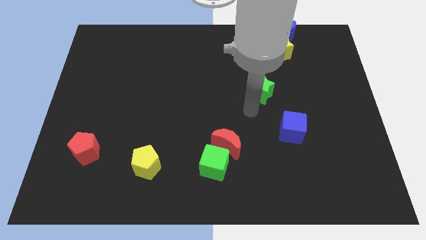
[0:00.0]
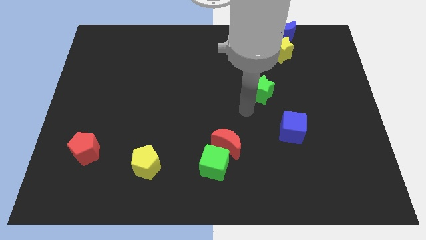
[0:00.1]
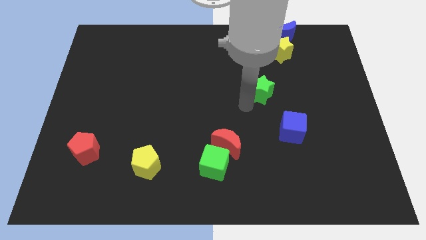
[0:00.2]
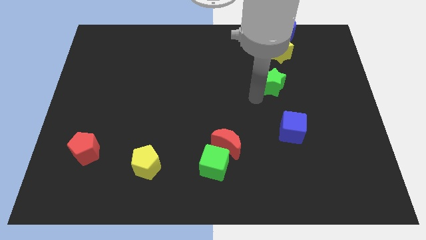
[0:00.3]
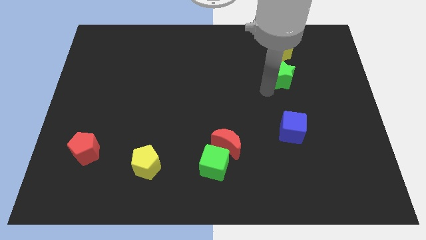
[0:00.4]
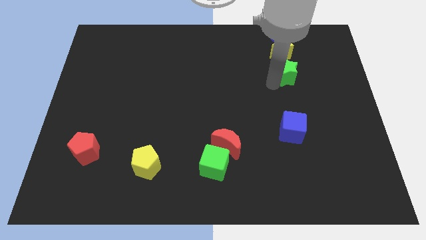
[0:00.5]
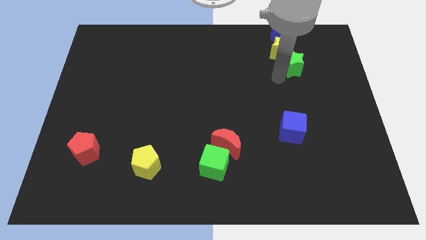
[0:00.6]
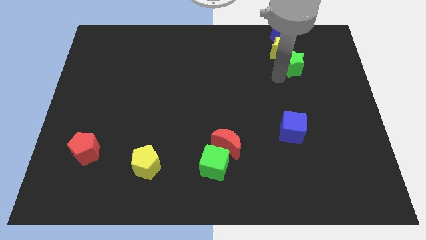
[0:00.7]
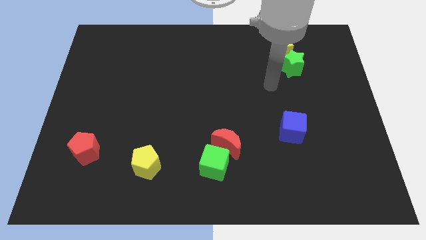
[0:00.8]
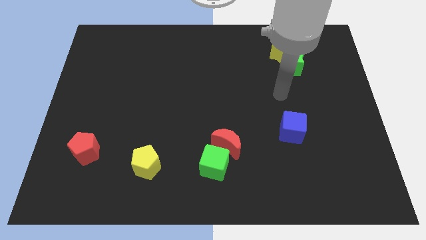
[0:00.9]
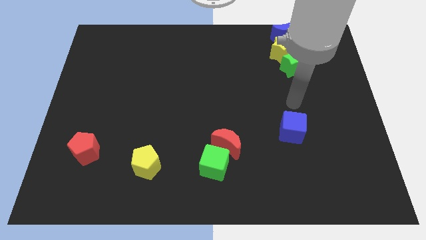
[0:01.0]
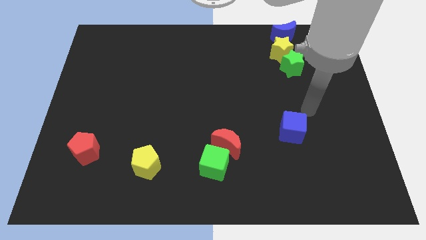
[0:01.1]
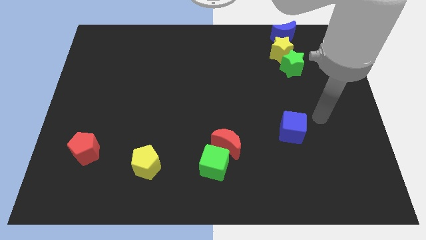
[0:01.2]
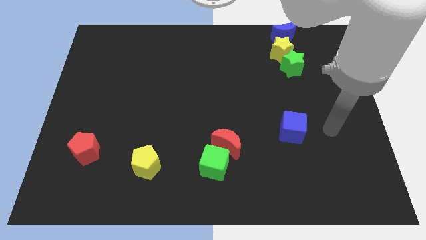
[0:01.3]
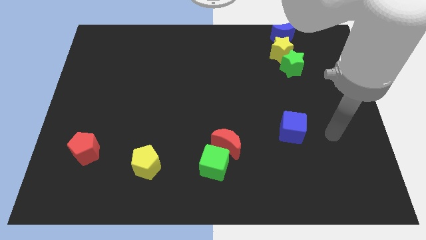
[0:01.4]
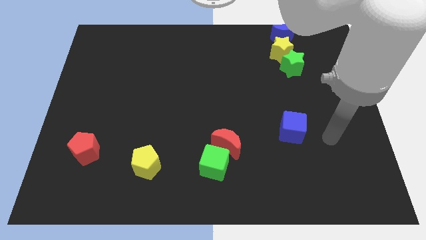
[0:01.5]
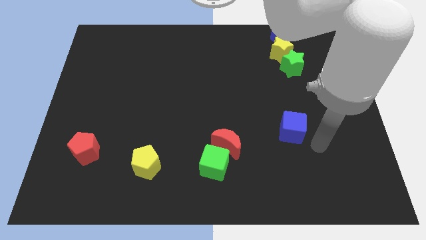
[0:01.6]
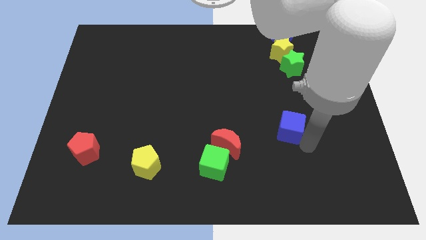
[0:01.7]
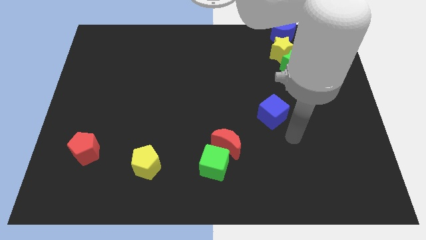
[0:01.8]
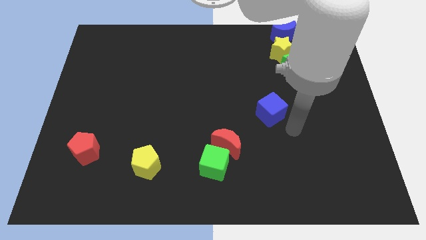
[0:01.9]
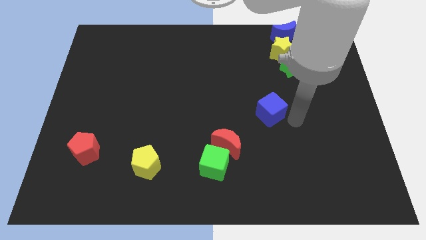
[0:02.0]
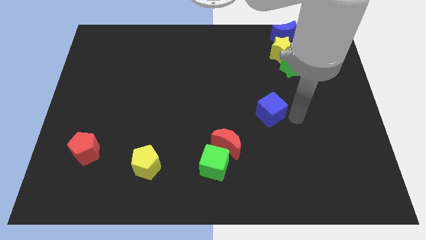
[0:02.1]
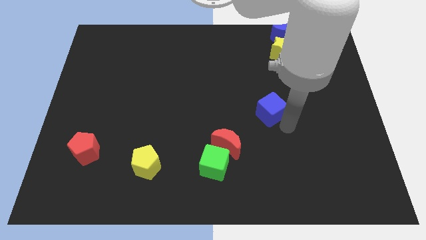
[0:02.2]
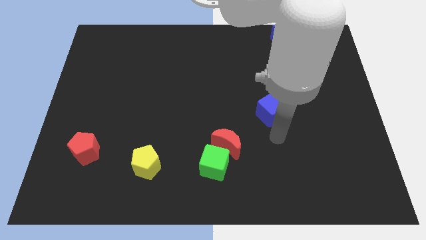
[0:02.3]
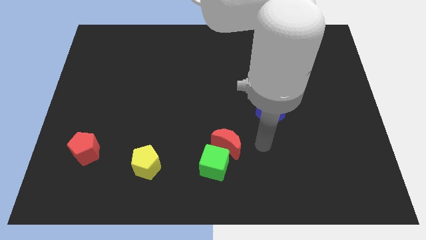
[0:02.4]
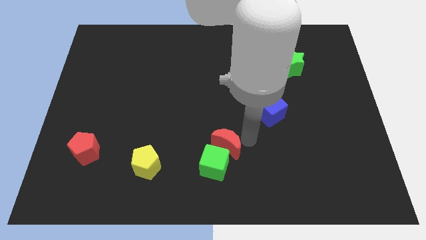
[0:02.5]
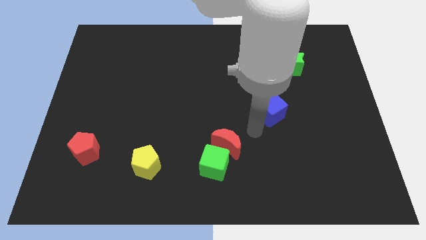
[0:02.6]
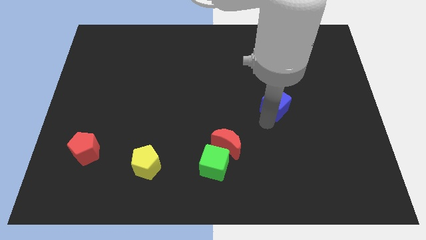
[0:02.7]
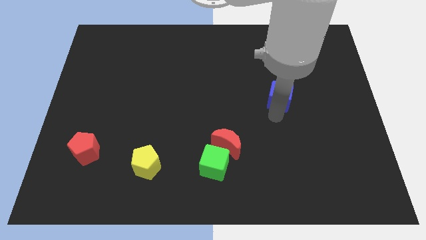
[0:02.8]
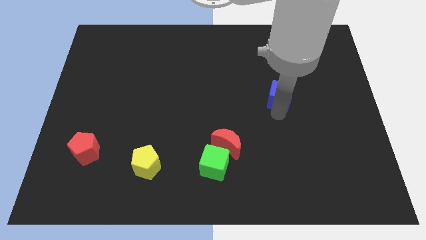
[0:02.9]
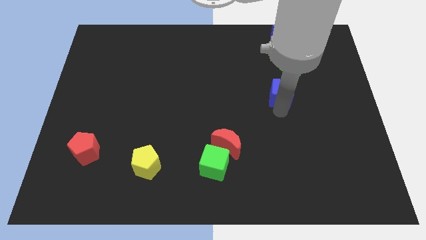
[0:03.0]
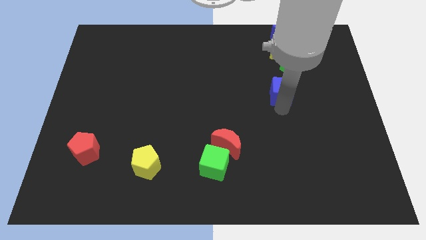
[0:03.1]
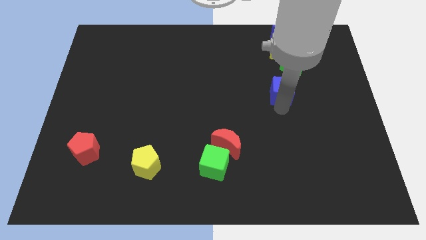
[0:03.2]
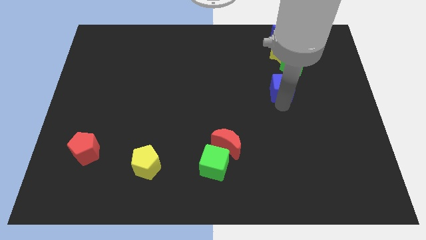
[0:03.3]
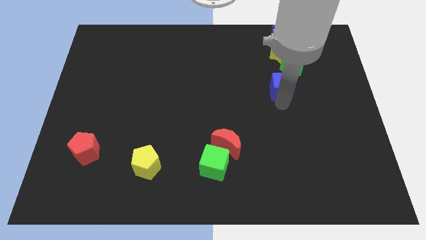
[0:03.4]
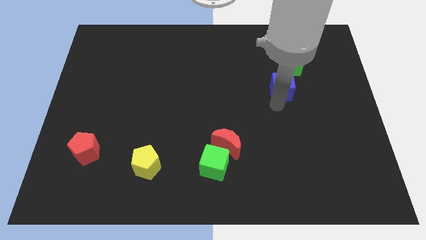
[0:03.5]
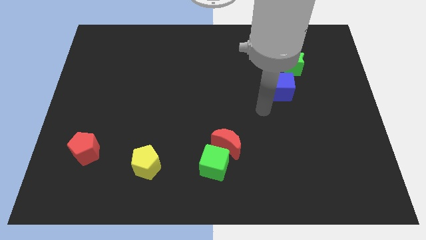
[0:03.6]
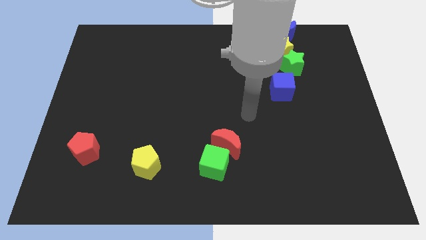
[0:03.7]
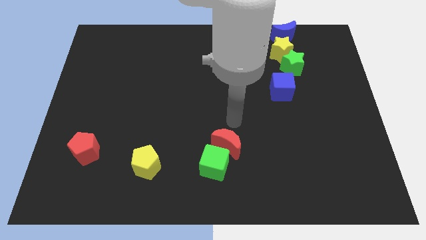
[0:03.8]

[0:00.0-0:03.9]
move blue cube left below the green star

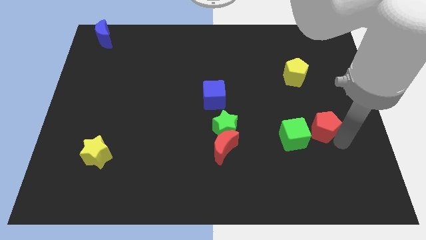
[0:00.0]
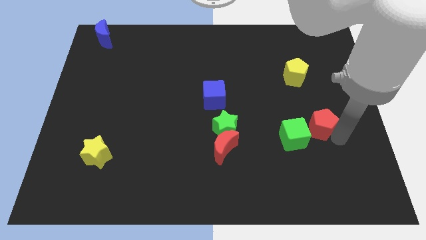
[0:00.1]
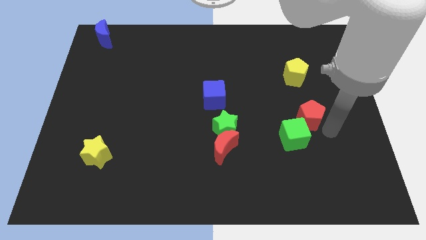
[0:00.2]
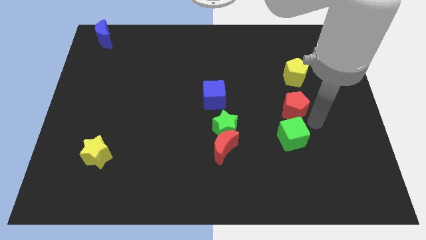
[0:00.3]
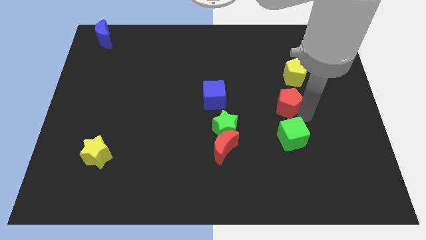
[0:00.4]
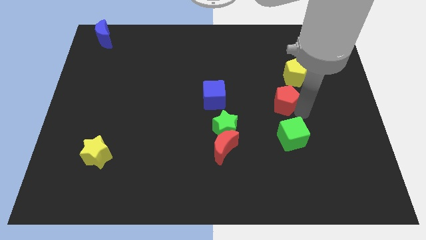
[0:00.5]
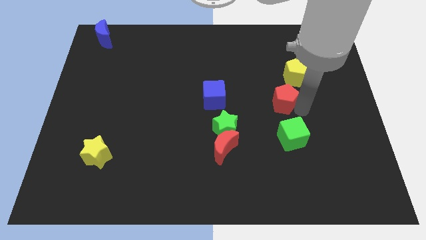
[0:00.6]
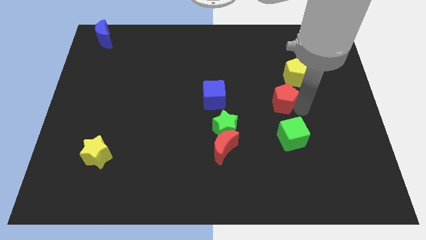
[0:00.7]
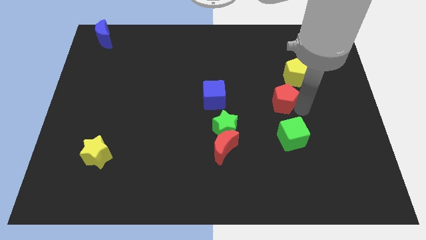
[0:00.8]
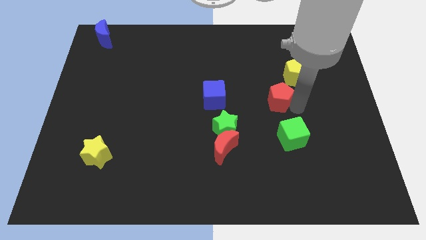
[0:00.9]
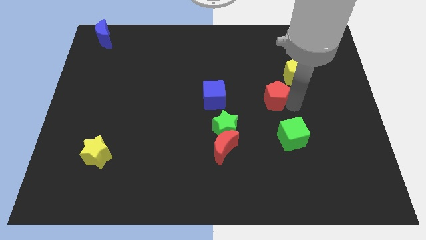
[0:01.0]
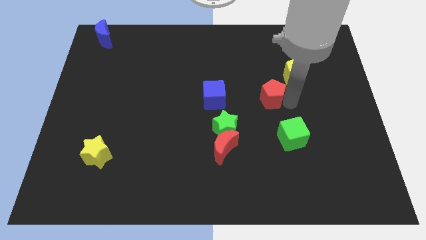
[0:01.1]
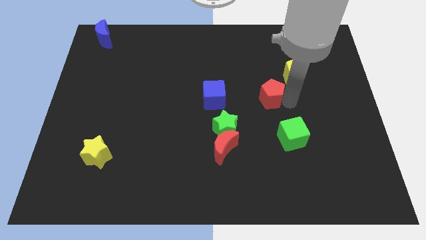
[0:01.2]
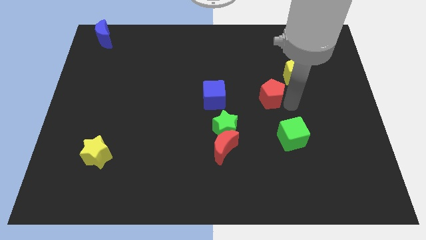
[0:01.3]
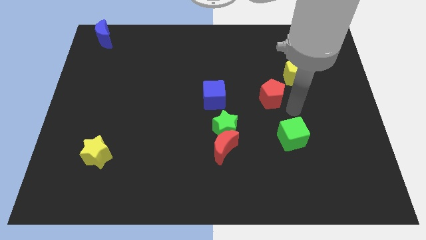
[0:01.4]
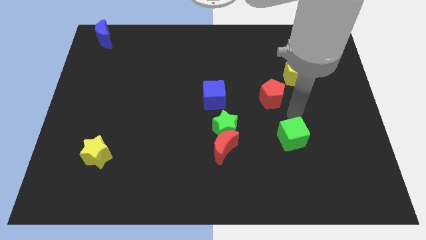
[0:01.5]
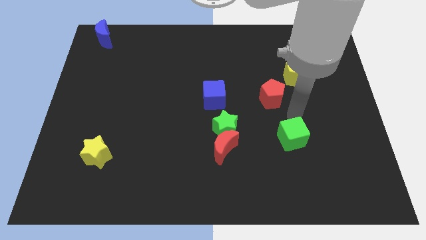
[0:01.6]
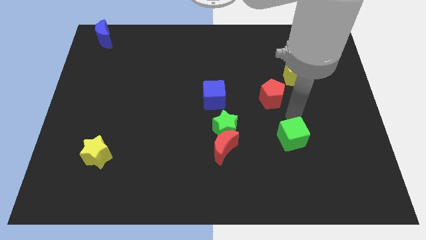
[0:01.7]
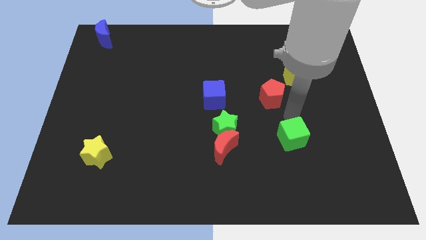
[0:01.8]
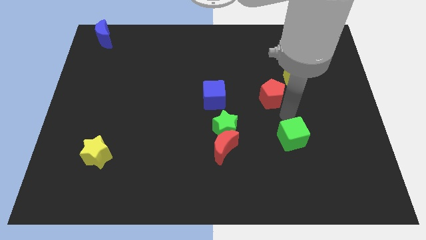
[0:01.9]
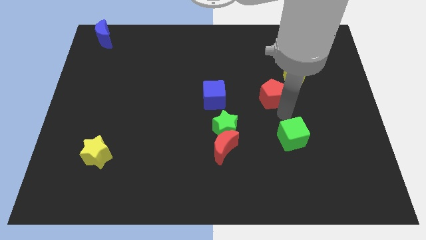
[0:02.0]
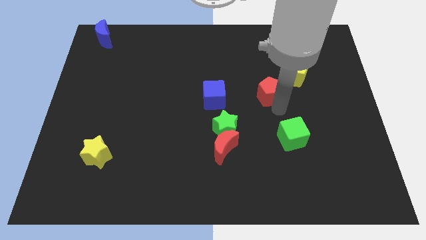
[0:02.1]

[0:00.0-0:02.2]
push the red pentagon to the right of the blue cube

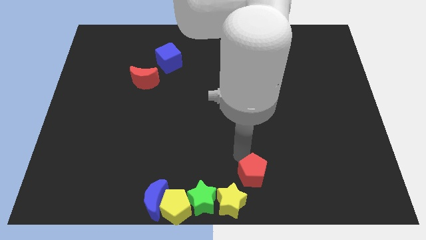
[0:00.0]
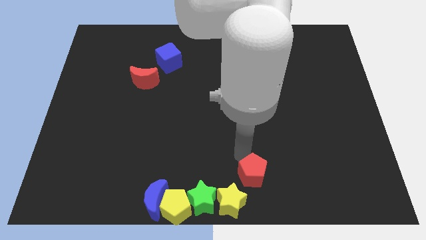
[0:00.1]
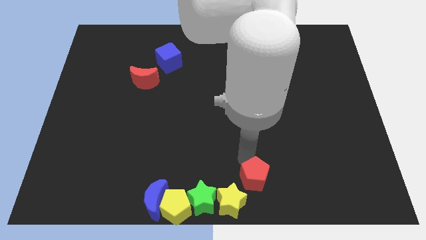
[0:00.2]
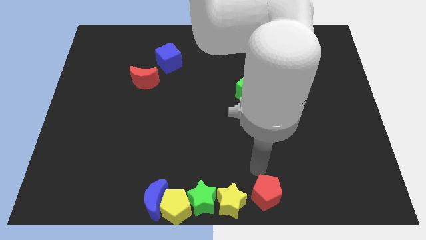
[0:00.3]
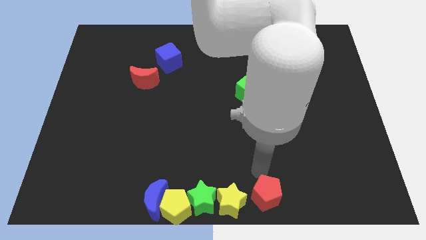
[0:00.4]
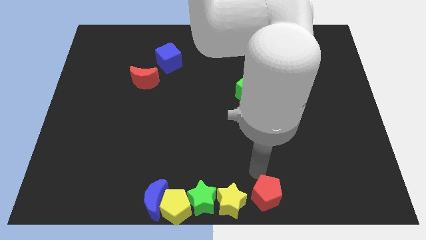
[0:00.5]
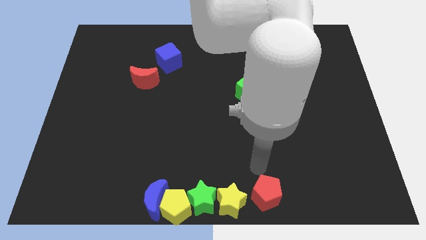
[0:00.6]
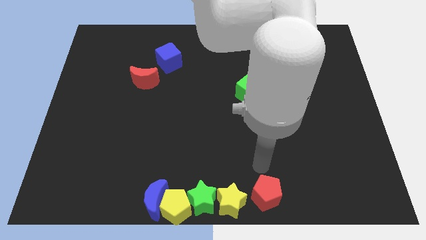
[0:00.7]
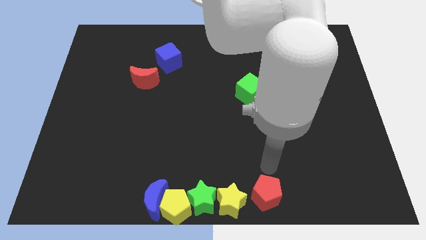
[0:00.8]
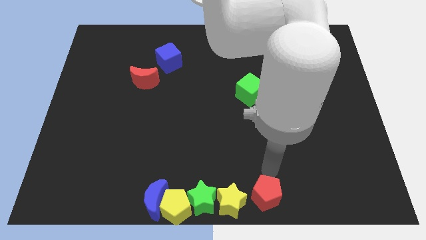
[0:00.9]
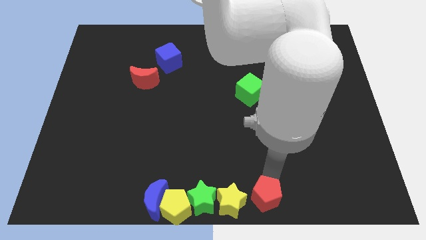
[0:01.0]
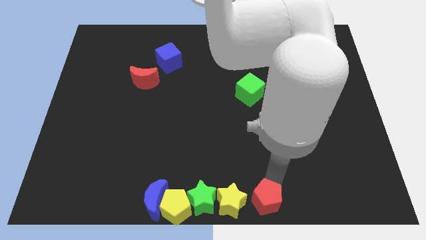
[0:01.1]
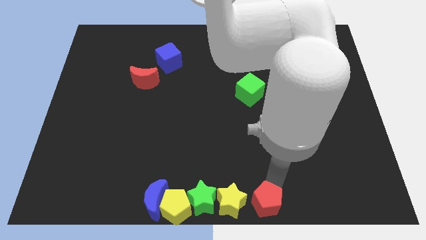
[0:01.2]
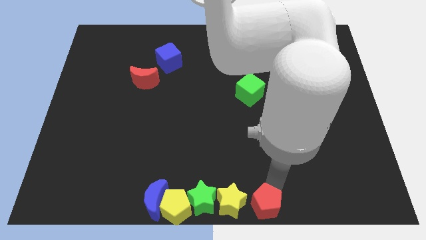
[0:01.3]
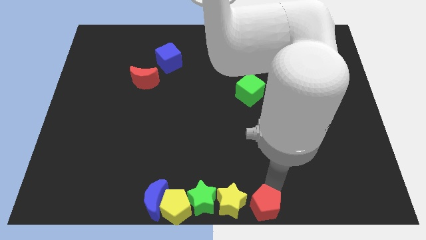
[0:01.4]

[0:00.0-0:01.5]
place the red pentagon to the right of the yellow star

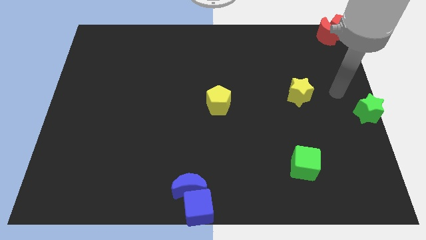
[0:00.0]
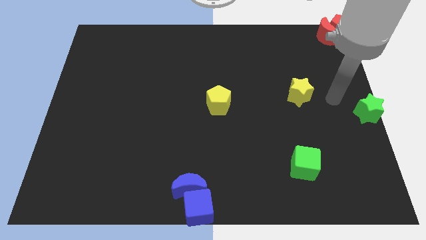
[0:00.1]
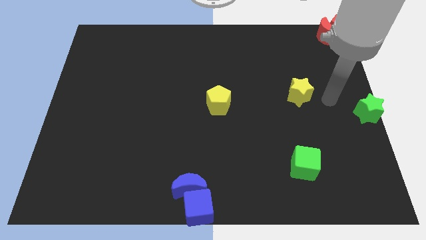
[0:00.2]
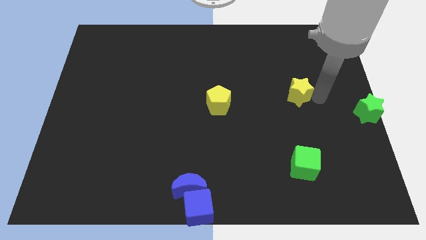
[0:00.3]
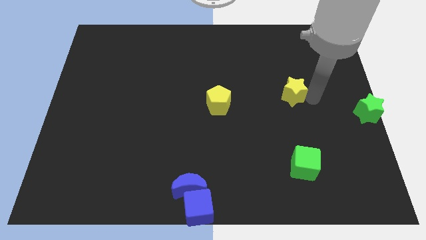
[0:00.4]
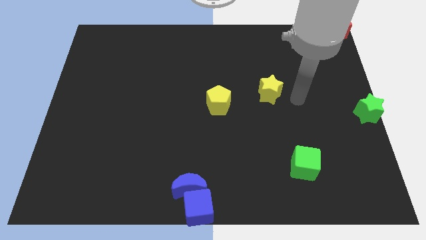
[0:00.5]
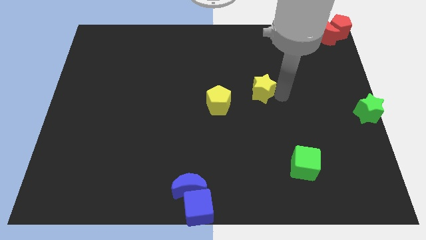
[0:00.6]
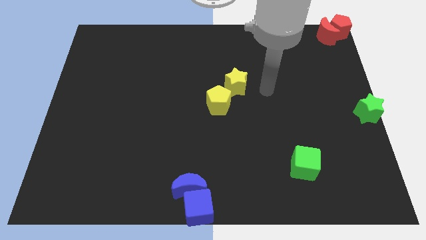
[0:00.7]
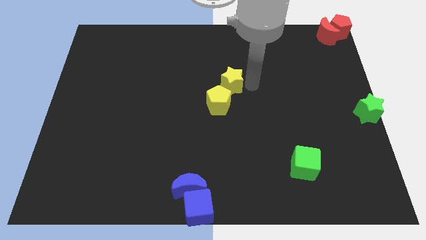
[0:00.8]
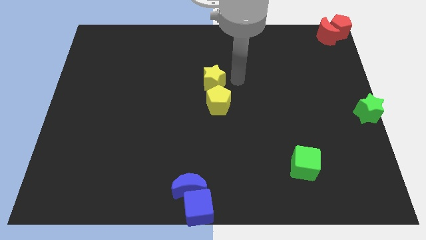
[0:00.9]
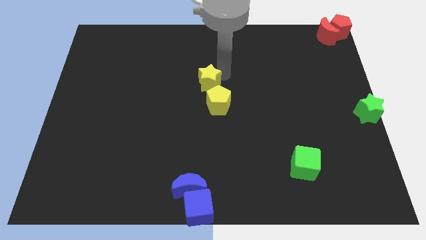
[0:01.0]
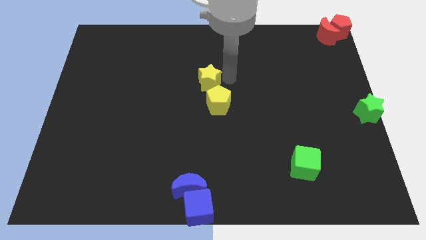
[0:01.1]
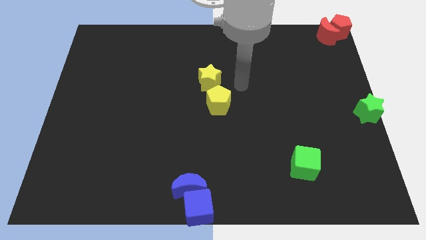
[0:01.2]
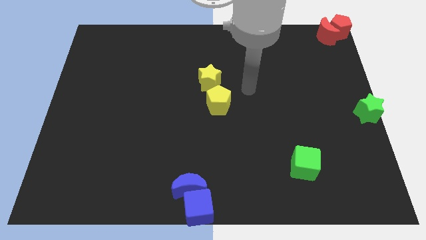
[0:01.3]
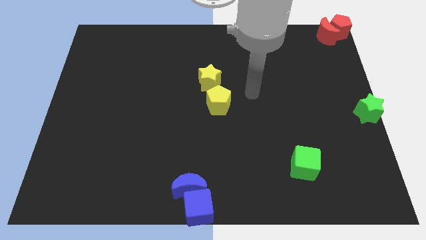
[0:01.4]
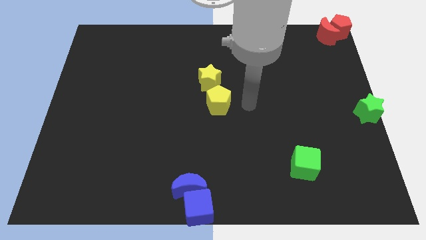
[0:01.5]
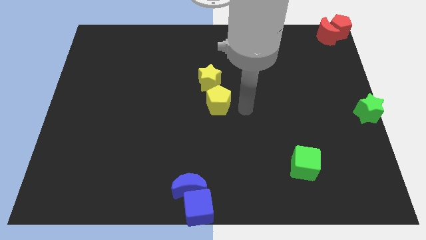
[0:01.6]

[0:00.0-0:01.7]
push the yellow star top of the yellow pentagon
